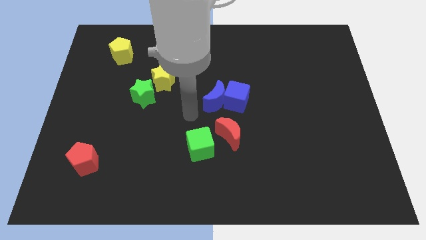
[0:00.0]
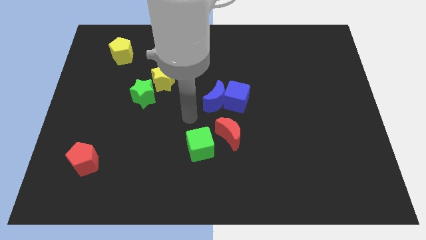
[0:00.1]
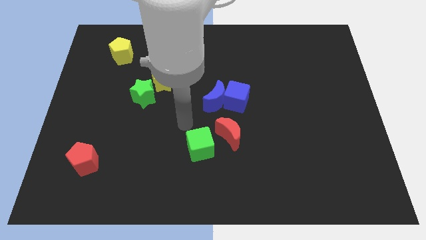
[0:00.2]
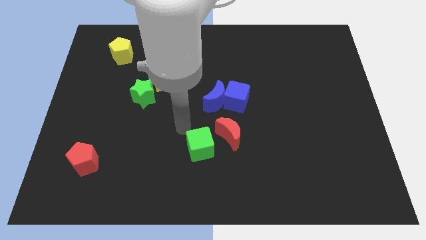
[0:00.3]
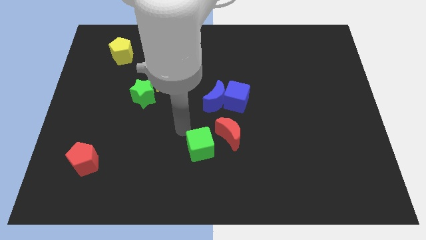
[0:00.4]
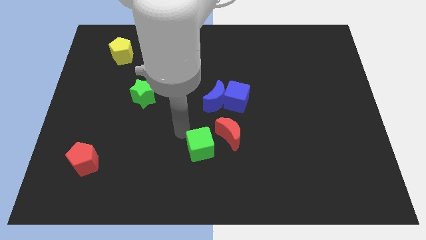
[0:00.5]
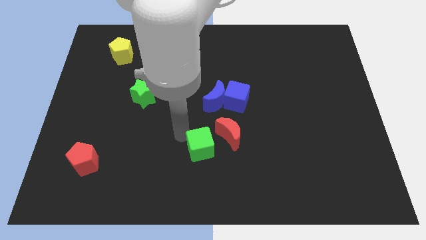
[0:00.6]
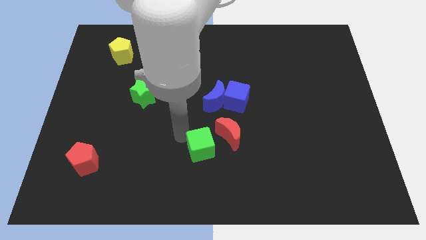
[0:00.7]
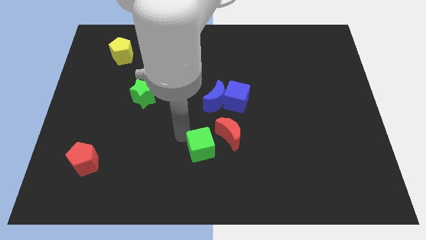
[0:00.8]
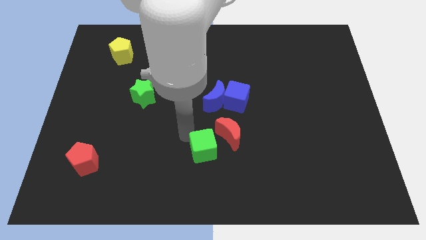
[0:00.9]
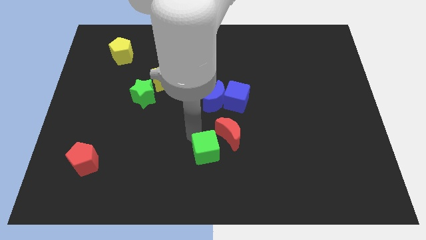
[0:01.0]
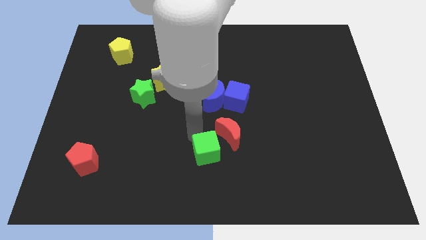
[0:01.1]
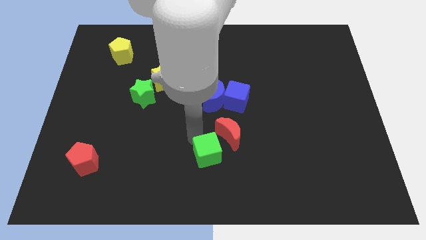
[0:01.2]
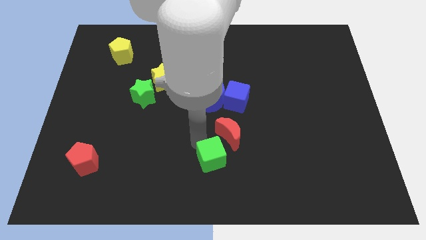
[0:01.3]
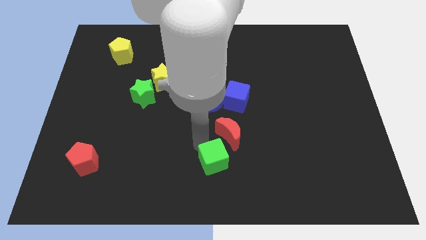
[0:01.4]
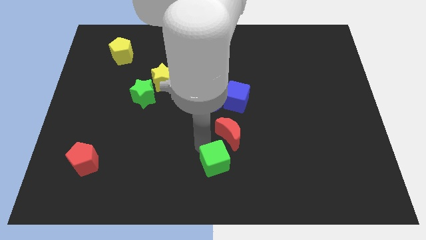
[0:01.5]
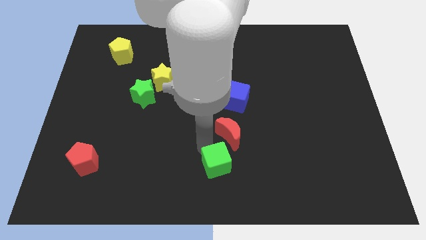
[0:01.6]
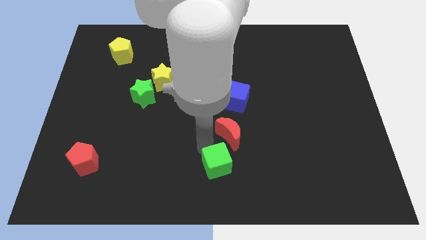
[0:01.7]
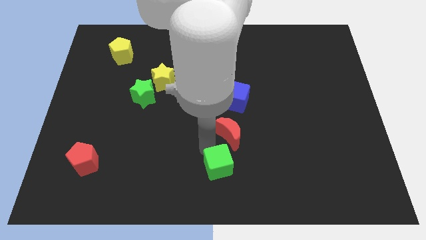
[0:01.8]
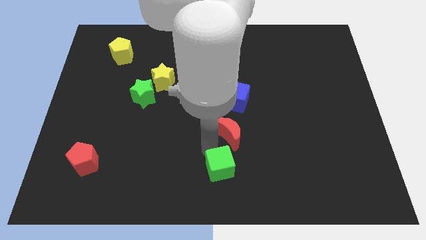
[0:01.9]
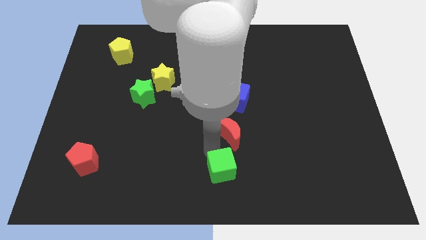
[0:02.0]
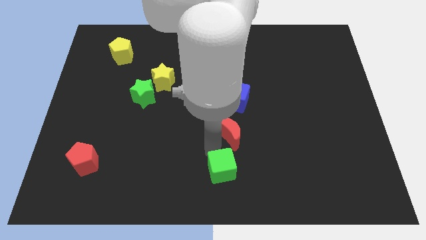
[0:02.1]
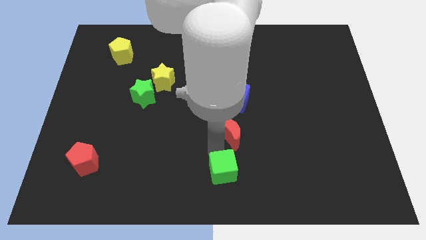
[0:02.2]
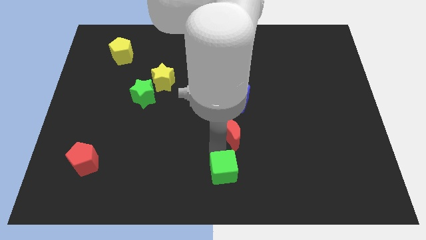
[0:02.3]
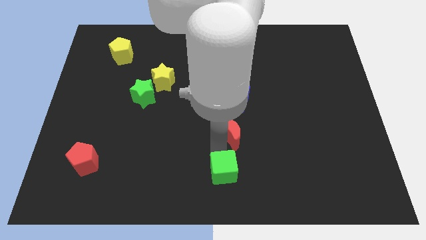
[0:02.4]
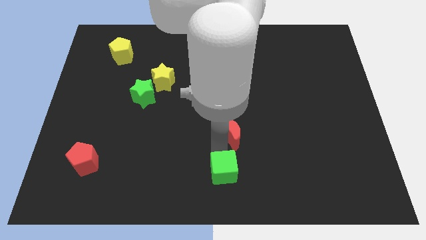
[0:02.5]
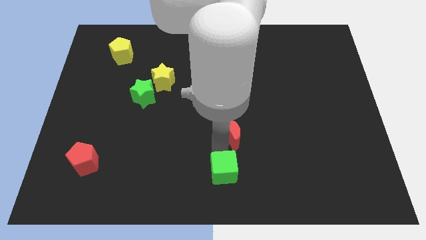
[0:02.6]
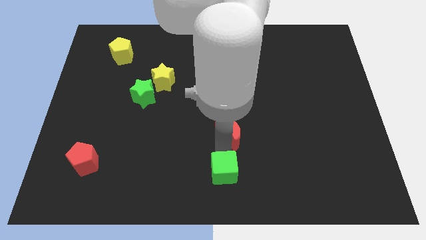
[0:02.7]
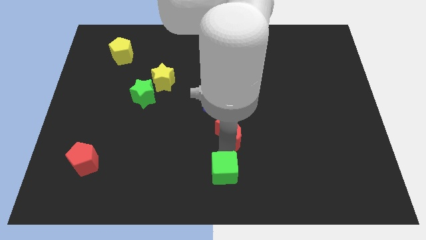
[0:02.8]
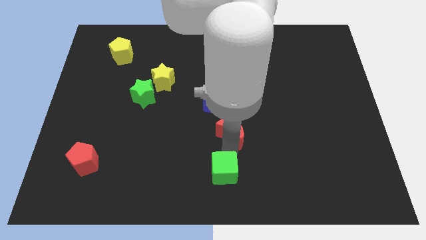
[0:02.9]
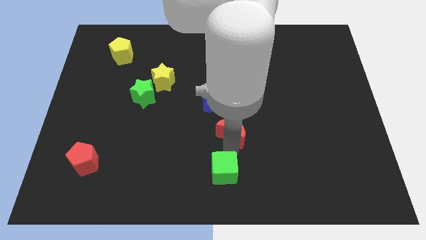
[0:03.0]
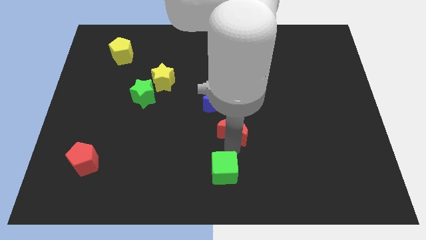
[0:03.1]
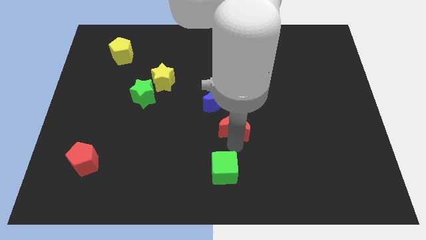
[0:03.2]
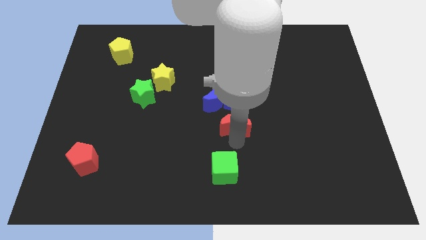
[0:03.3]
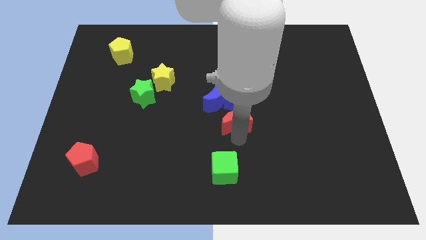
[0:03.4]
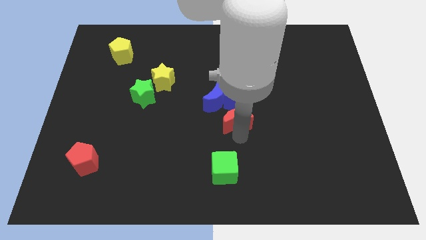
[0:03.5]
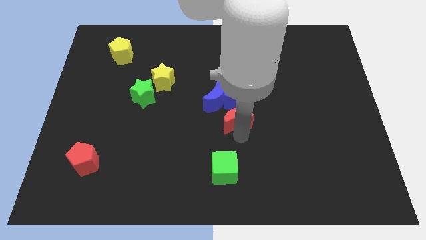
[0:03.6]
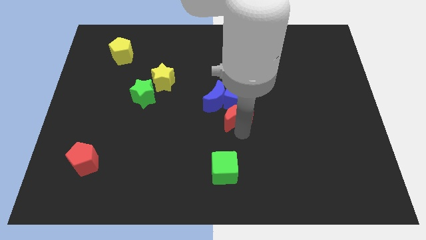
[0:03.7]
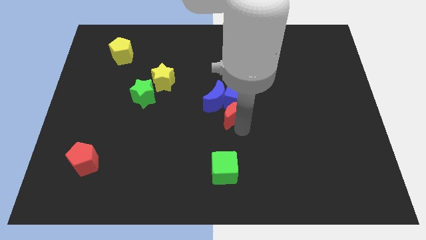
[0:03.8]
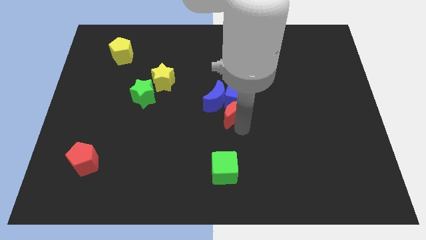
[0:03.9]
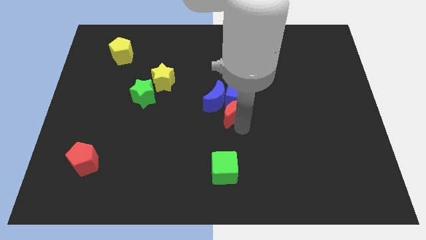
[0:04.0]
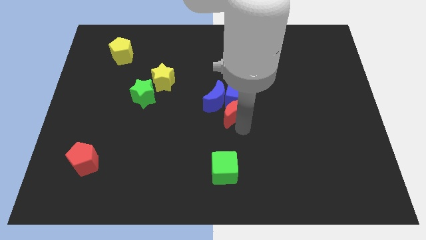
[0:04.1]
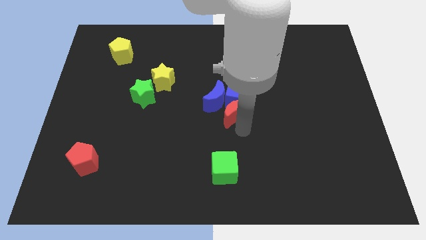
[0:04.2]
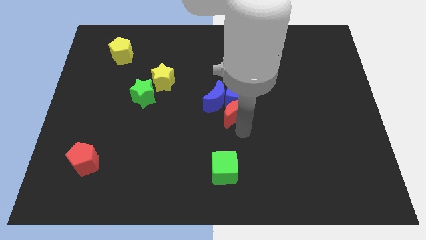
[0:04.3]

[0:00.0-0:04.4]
separate the red crescent and the green cube

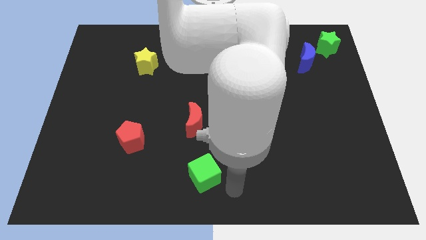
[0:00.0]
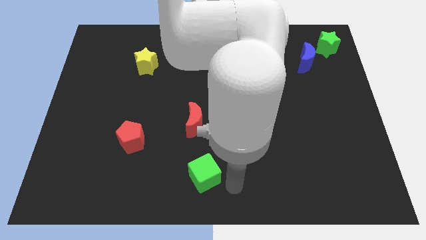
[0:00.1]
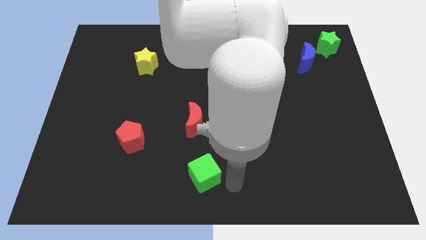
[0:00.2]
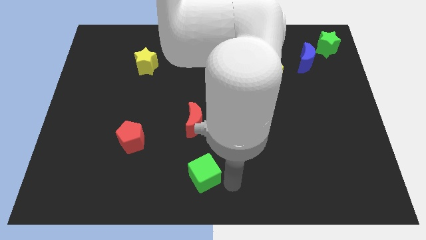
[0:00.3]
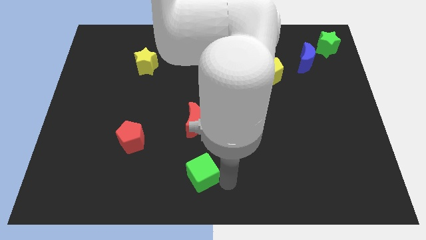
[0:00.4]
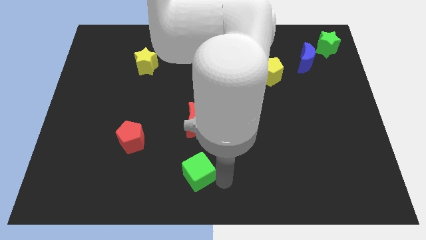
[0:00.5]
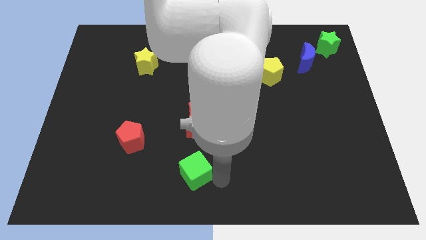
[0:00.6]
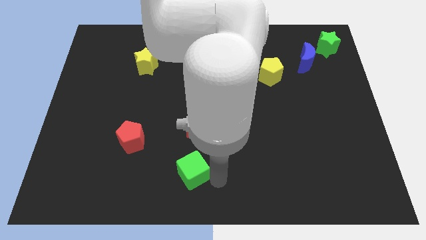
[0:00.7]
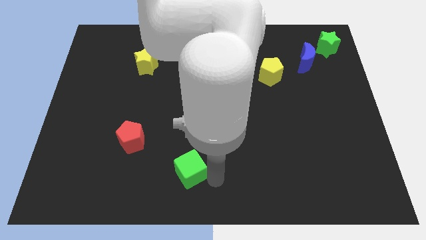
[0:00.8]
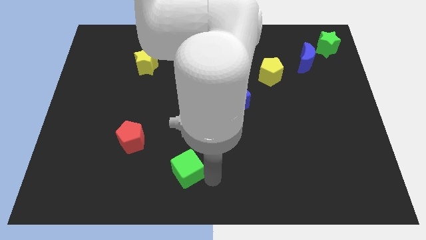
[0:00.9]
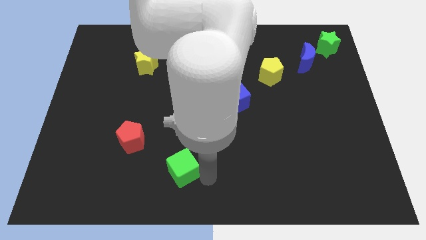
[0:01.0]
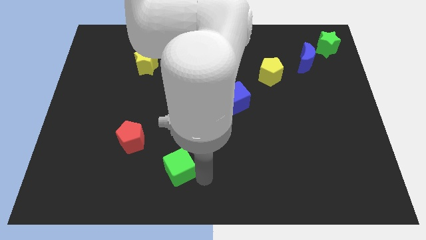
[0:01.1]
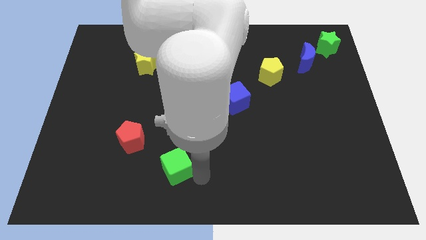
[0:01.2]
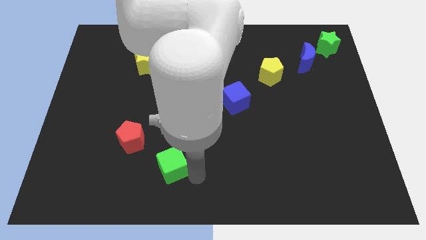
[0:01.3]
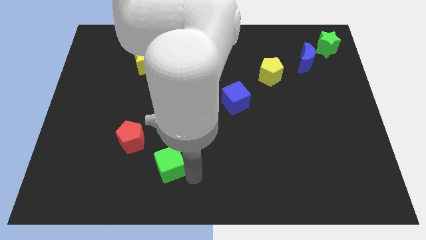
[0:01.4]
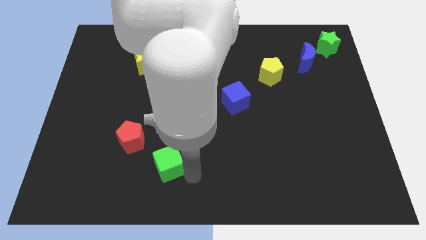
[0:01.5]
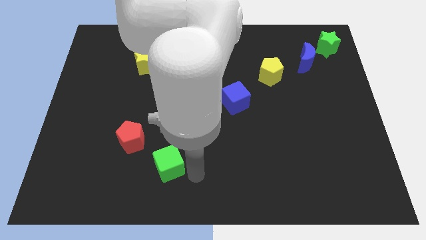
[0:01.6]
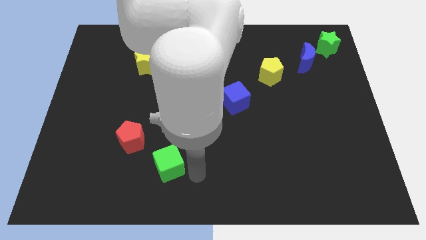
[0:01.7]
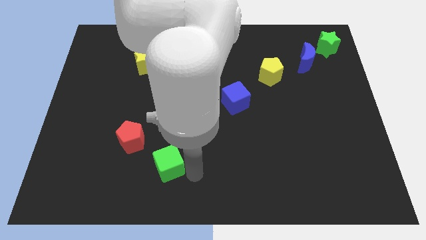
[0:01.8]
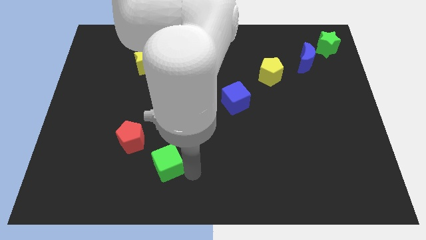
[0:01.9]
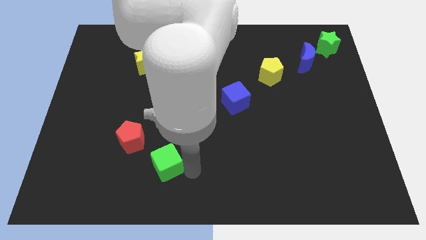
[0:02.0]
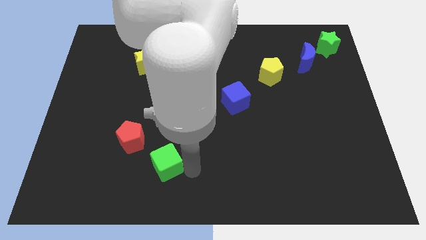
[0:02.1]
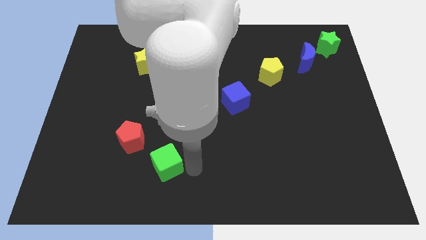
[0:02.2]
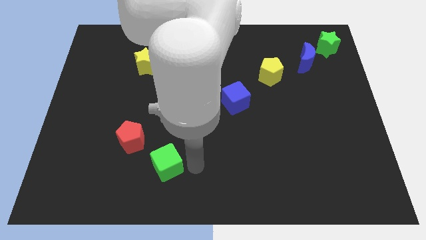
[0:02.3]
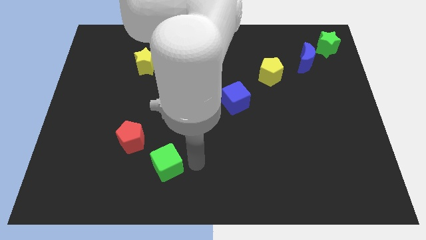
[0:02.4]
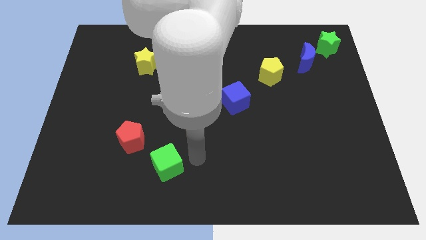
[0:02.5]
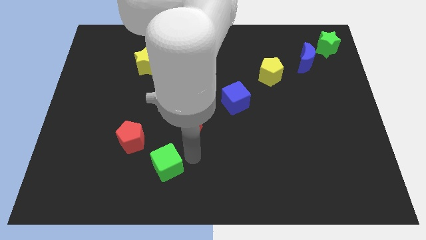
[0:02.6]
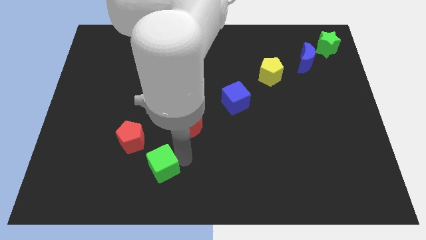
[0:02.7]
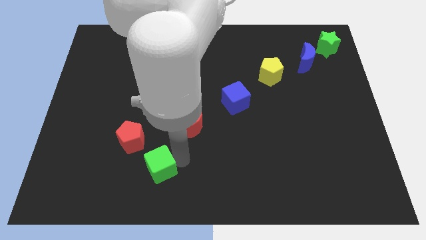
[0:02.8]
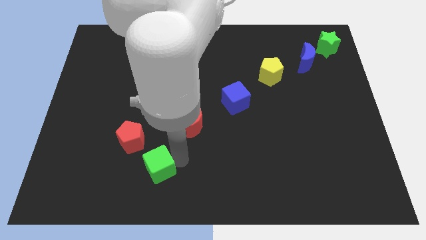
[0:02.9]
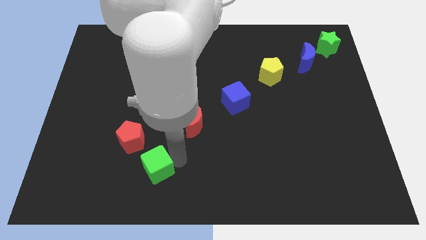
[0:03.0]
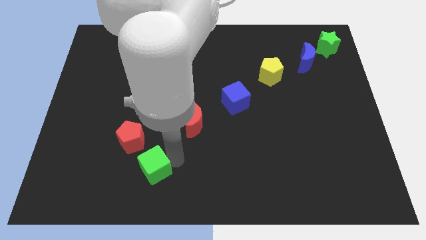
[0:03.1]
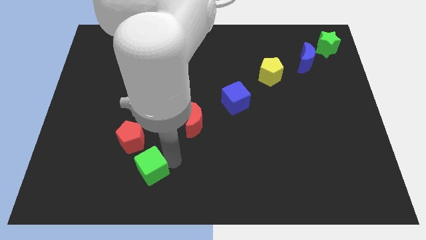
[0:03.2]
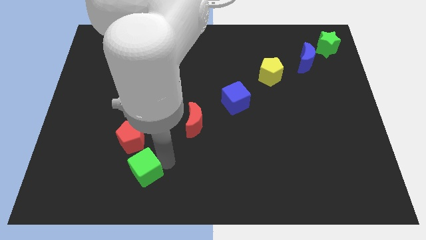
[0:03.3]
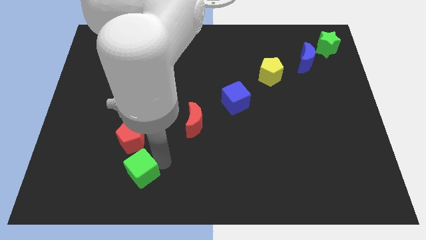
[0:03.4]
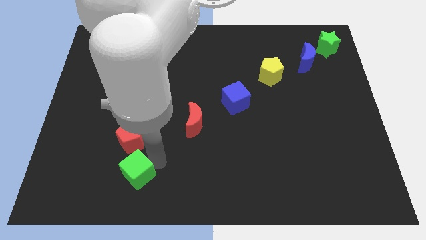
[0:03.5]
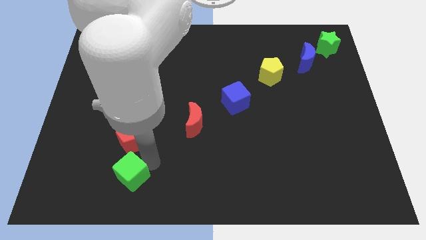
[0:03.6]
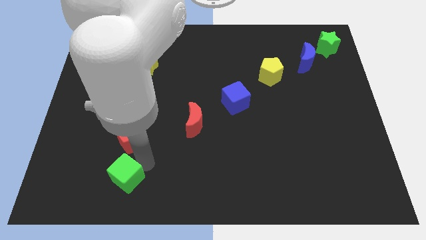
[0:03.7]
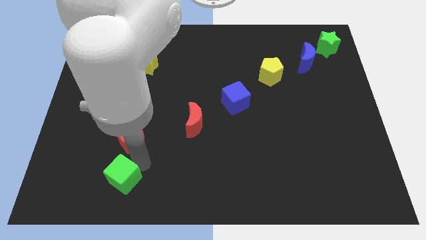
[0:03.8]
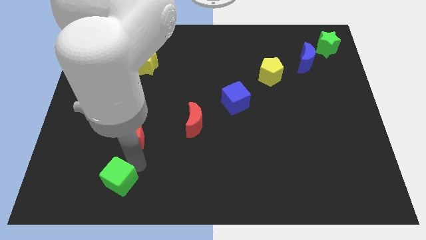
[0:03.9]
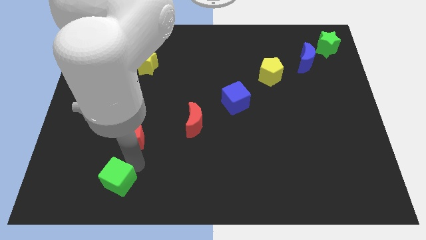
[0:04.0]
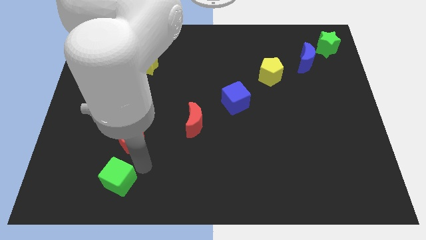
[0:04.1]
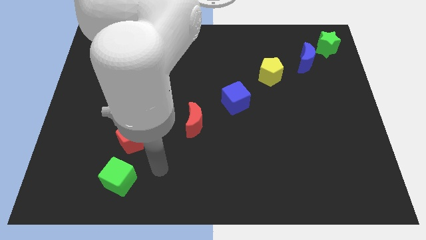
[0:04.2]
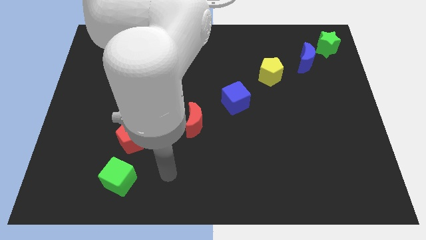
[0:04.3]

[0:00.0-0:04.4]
put the green cube below the red pentagon

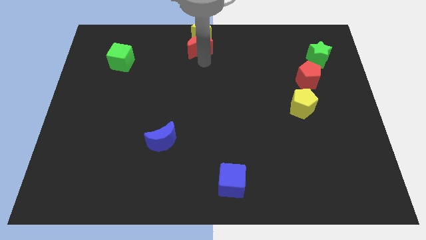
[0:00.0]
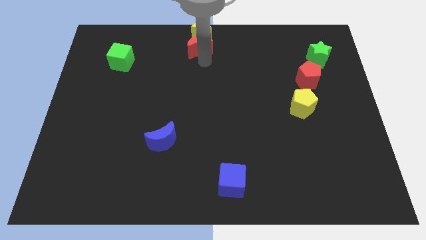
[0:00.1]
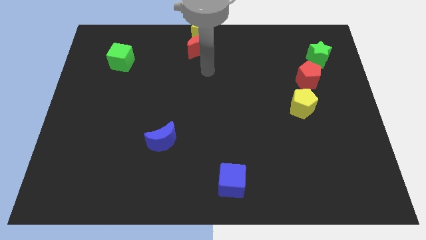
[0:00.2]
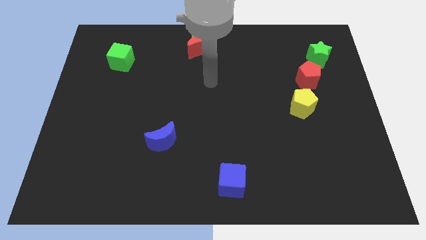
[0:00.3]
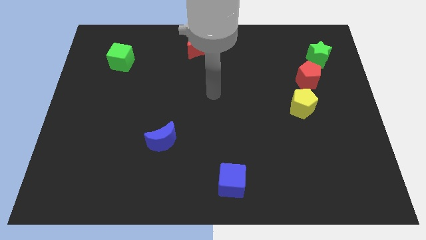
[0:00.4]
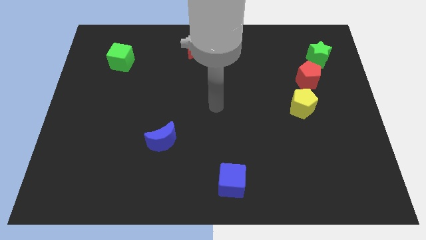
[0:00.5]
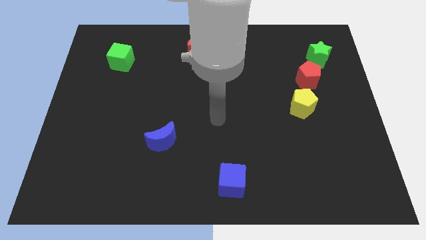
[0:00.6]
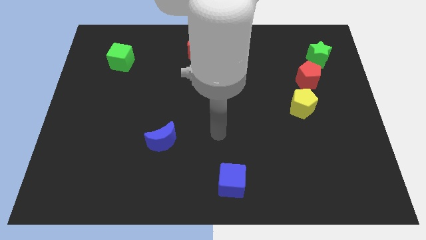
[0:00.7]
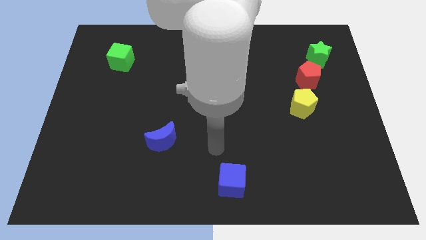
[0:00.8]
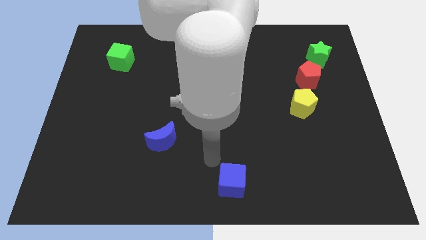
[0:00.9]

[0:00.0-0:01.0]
move the arm away from the red moon
